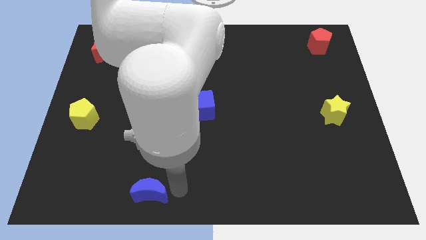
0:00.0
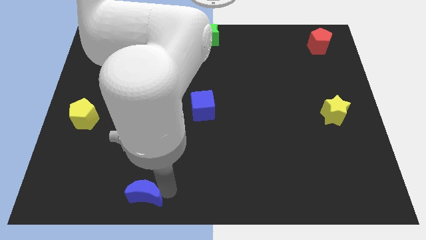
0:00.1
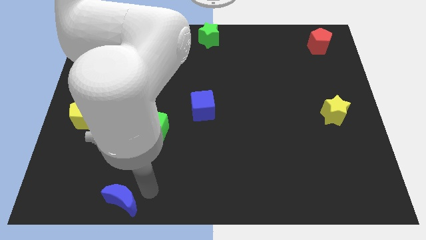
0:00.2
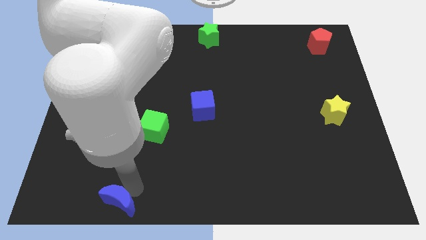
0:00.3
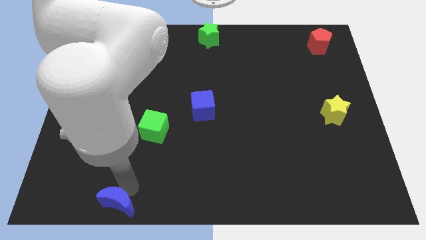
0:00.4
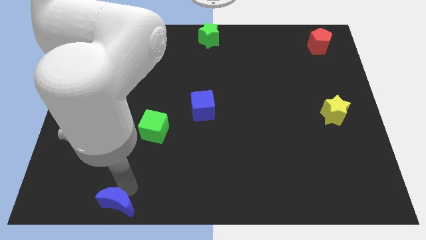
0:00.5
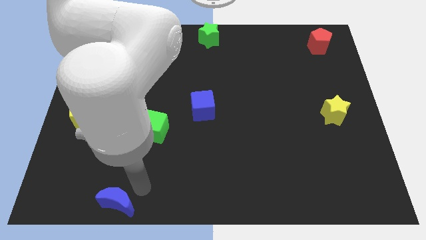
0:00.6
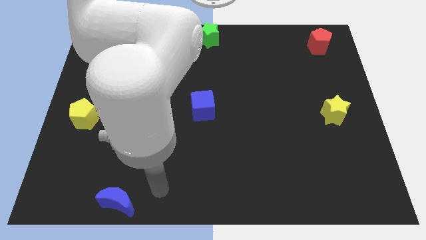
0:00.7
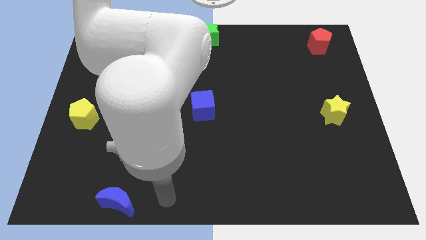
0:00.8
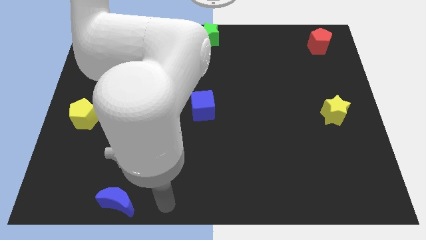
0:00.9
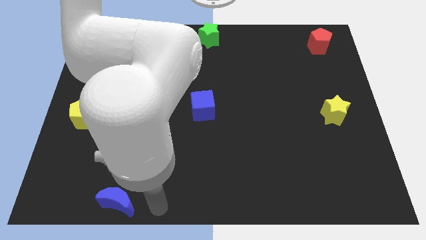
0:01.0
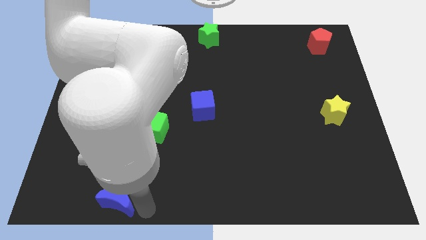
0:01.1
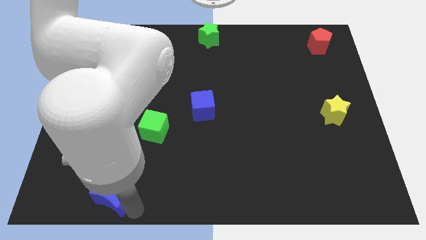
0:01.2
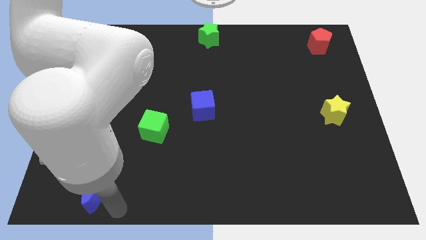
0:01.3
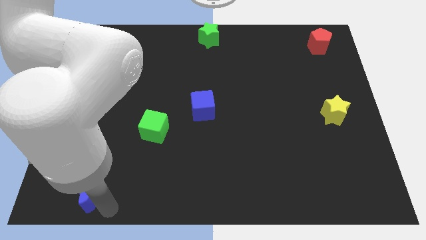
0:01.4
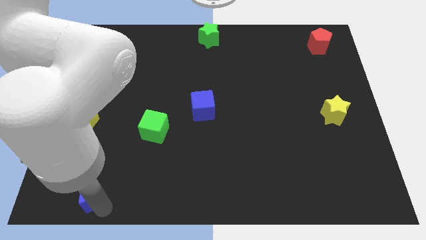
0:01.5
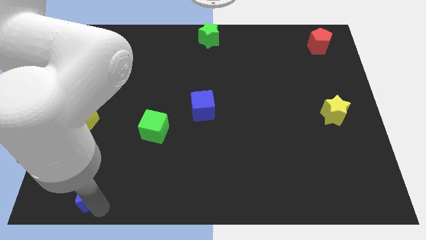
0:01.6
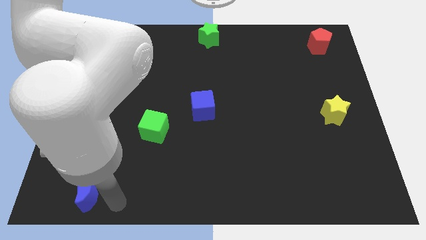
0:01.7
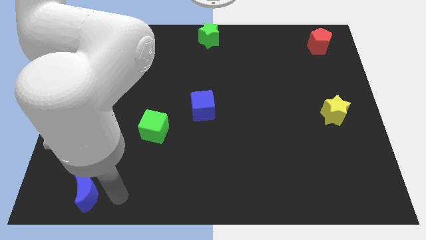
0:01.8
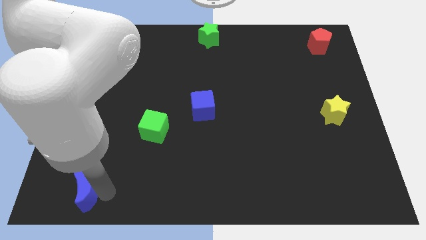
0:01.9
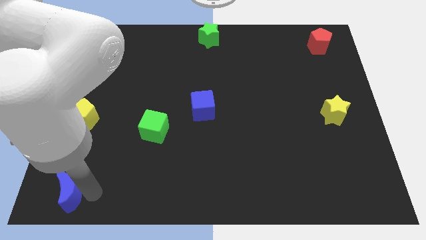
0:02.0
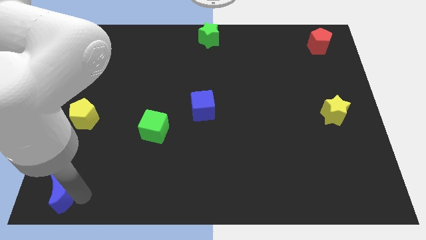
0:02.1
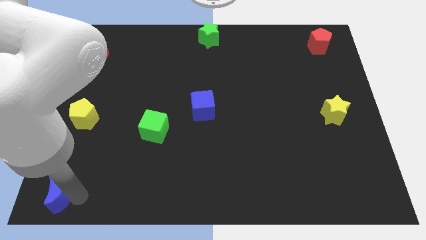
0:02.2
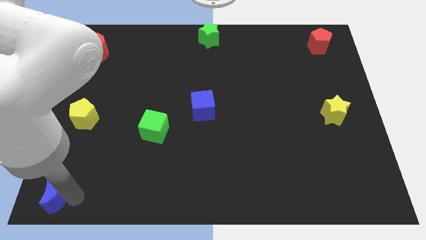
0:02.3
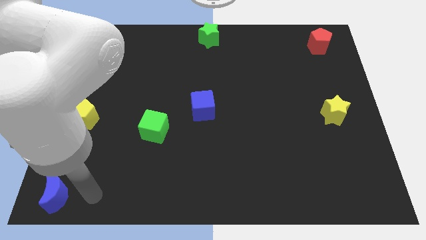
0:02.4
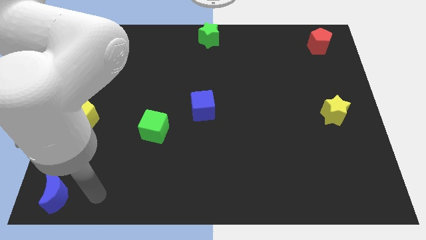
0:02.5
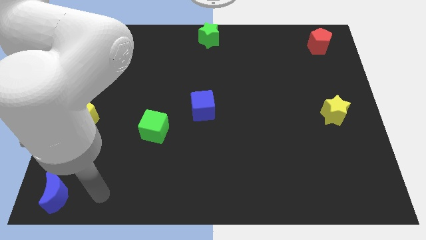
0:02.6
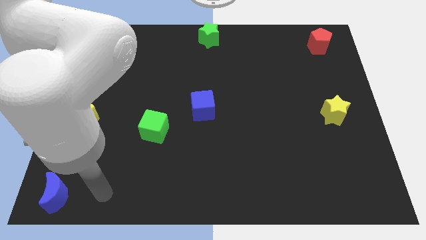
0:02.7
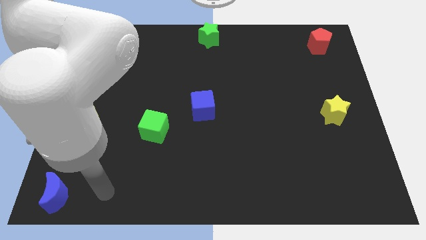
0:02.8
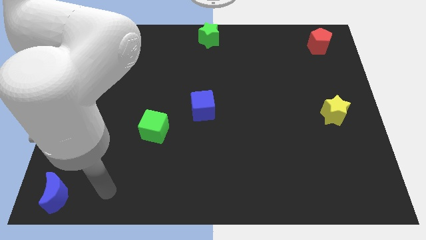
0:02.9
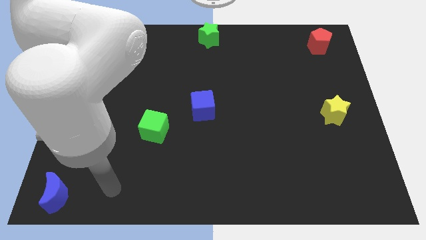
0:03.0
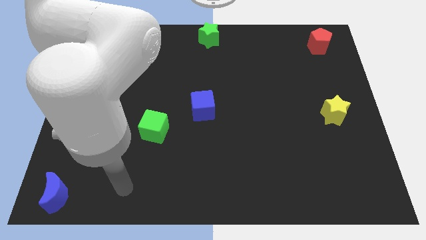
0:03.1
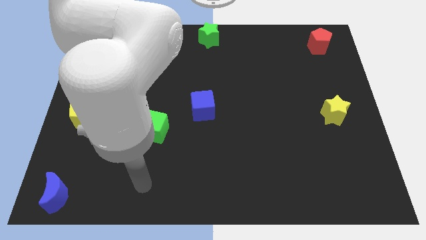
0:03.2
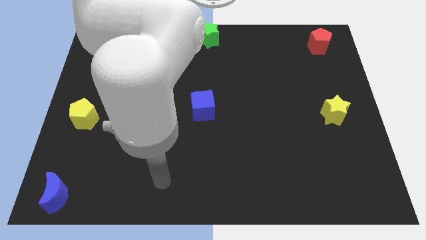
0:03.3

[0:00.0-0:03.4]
move blue moon to the bottom left side of the board

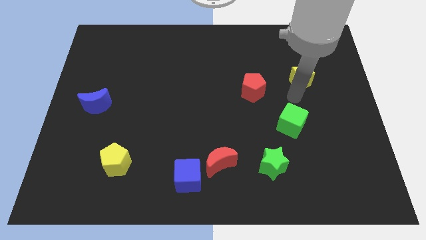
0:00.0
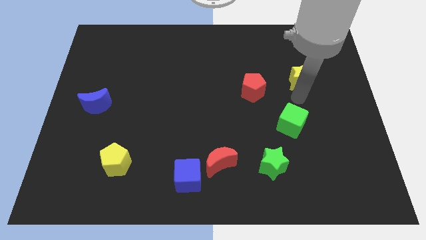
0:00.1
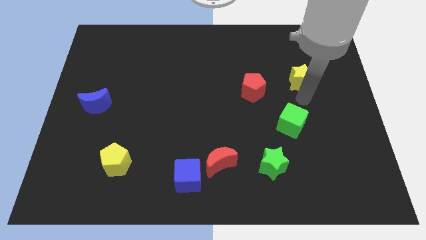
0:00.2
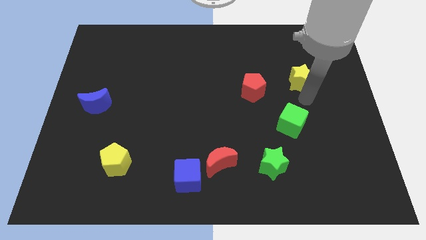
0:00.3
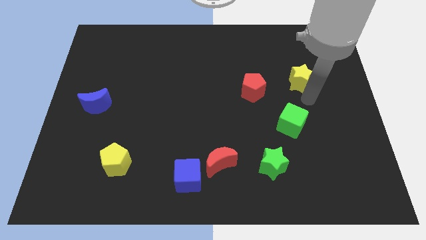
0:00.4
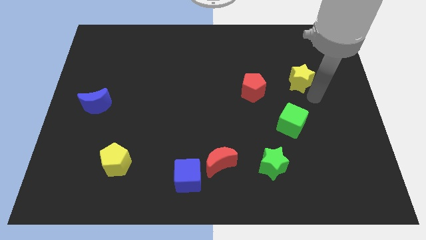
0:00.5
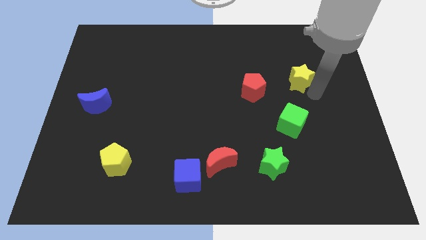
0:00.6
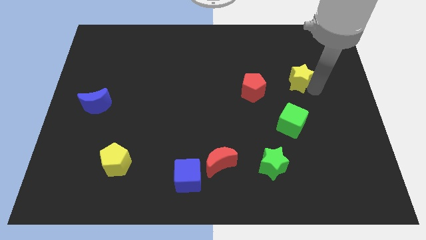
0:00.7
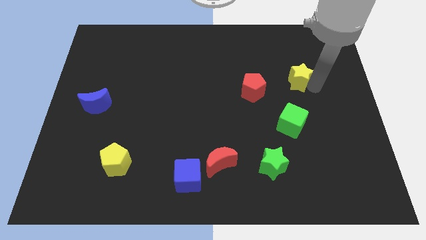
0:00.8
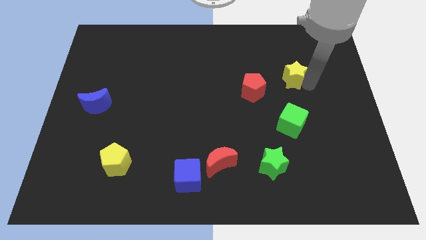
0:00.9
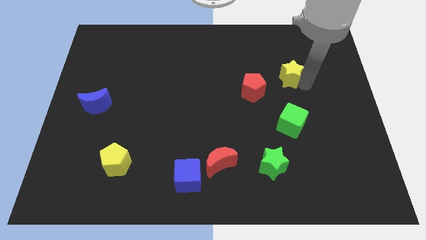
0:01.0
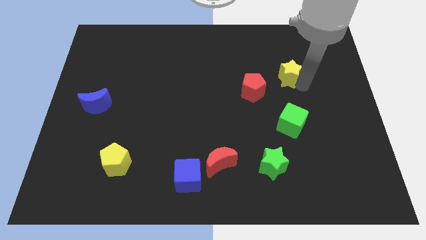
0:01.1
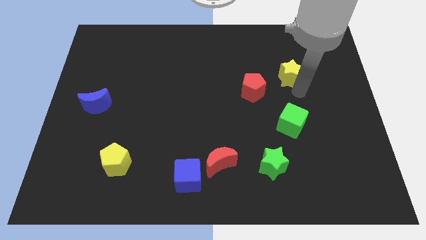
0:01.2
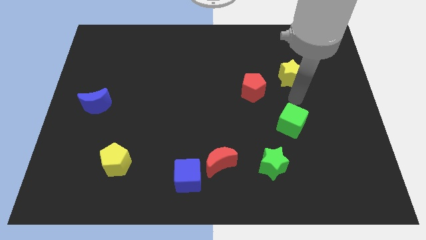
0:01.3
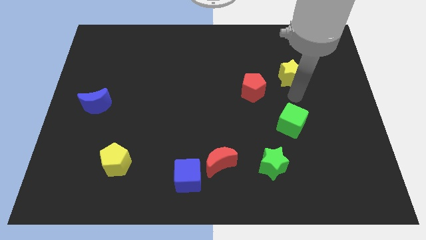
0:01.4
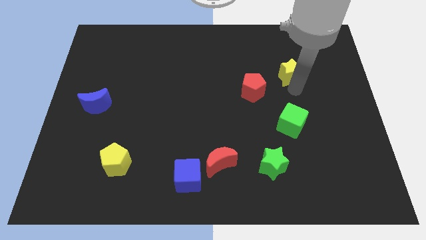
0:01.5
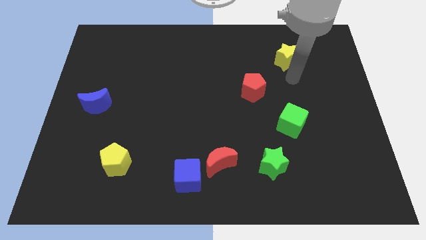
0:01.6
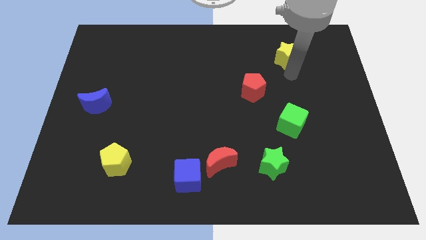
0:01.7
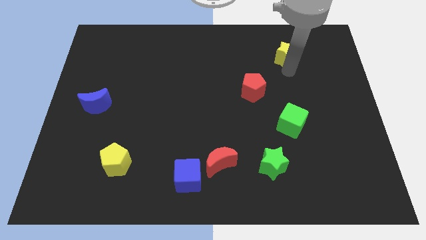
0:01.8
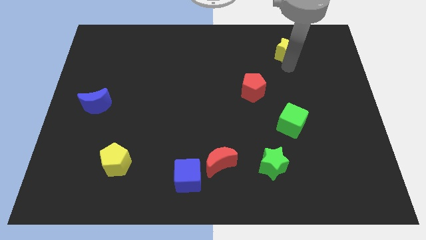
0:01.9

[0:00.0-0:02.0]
push the yellow star slightly to the top side of the board

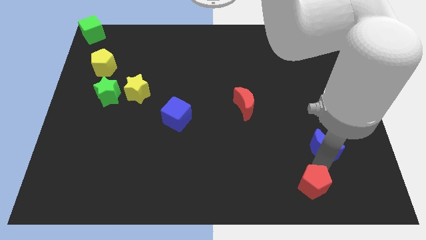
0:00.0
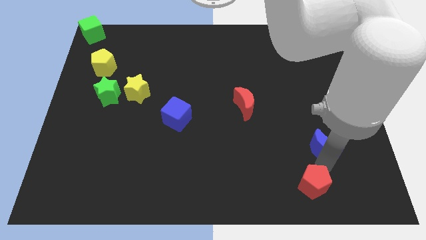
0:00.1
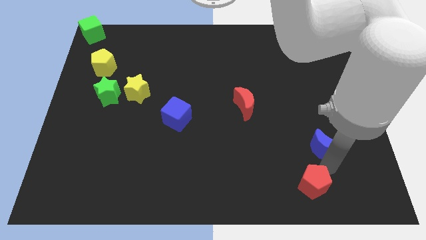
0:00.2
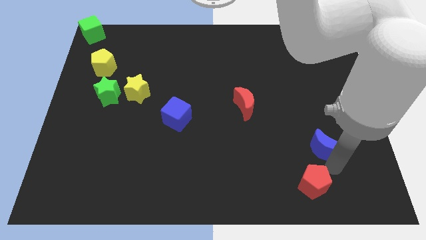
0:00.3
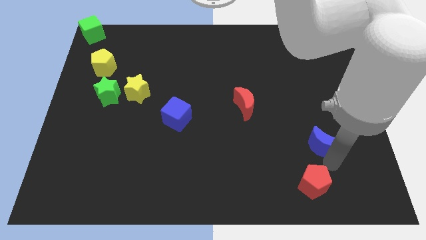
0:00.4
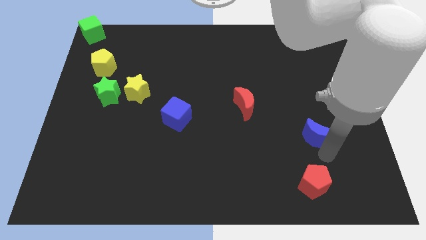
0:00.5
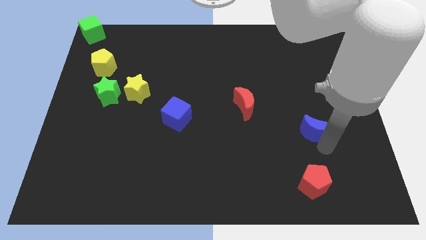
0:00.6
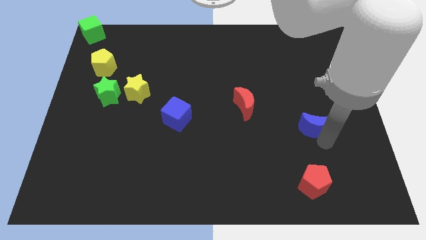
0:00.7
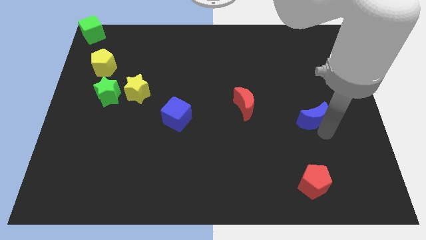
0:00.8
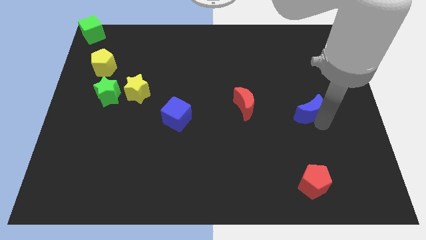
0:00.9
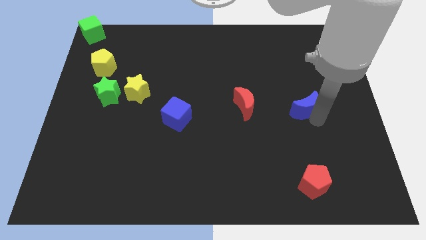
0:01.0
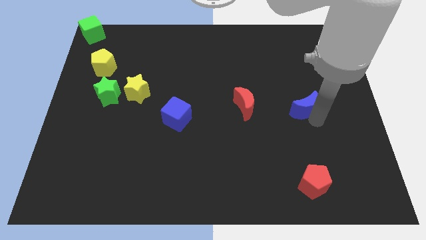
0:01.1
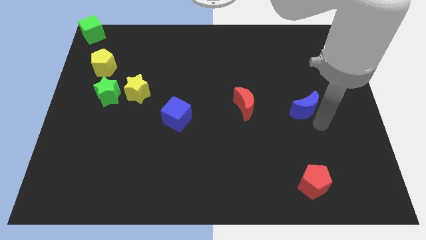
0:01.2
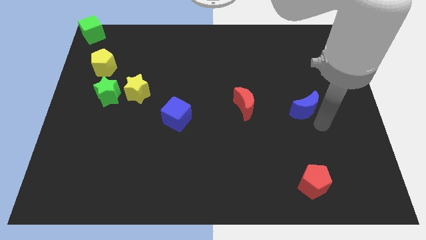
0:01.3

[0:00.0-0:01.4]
push the blue moon to the right of the red moon

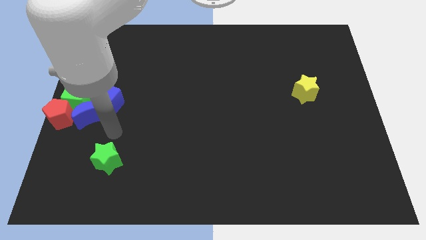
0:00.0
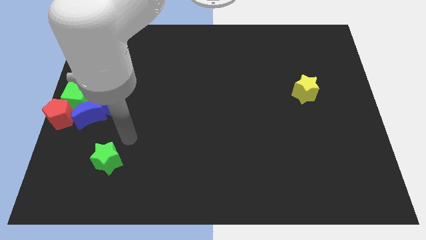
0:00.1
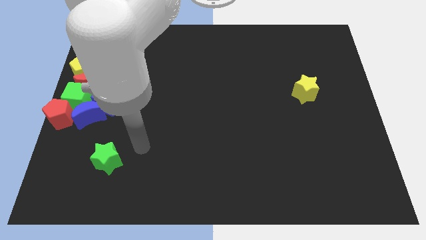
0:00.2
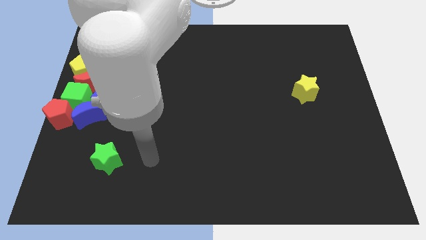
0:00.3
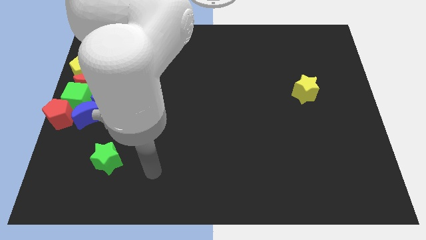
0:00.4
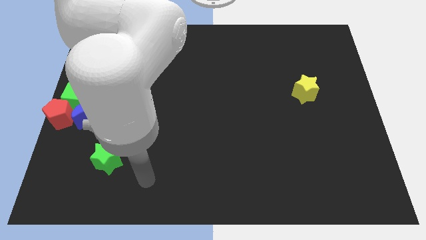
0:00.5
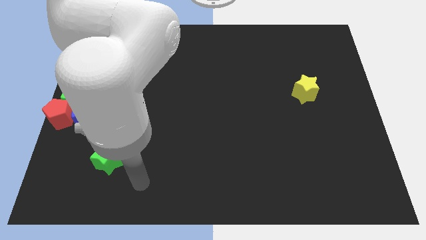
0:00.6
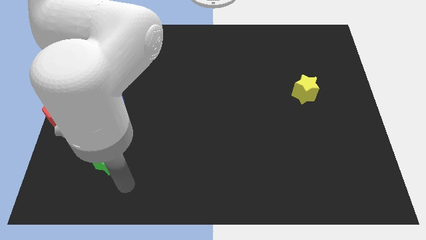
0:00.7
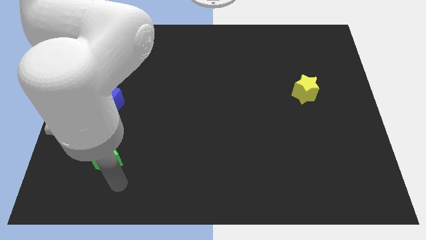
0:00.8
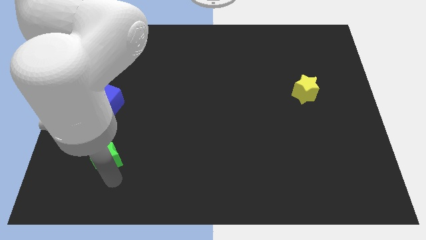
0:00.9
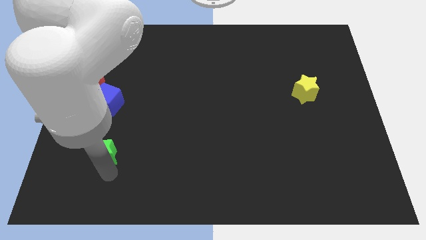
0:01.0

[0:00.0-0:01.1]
tap the green star

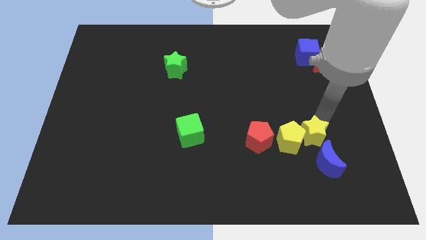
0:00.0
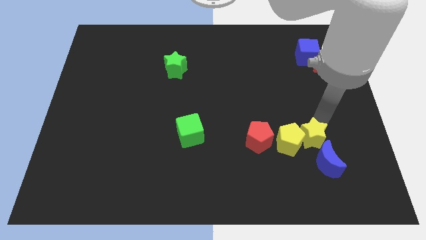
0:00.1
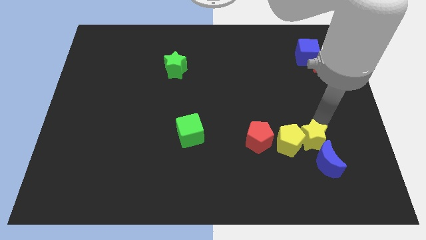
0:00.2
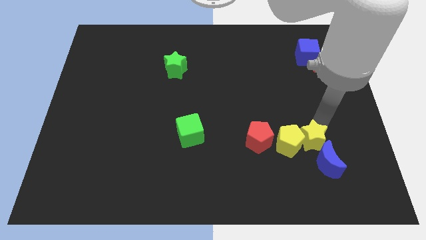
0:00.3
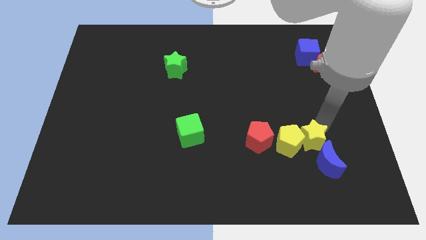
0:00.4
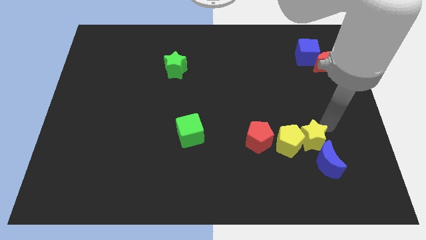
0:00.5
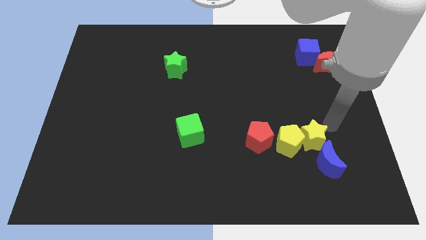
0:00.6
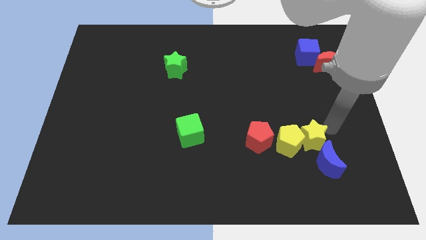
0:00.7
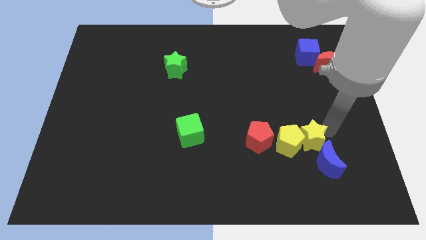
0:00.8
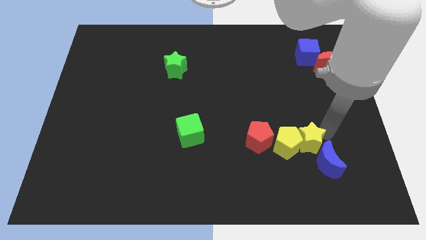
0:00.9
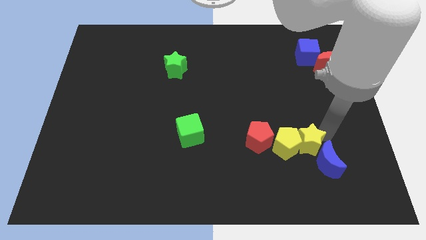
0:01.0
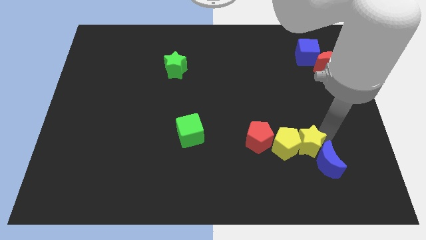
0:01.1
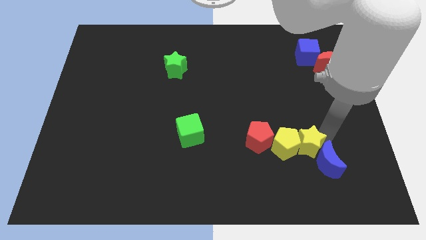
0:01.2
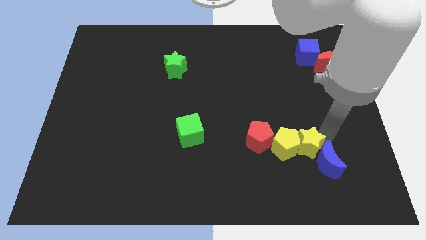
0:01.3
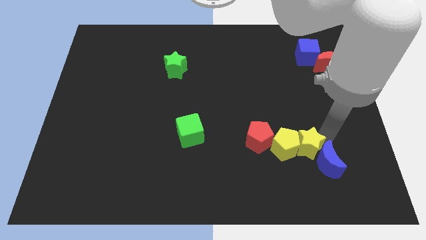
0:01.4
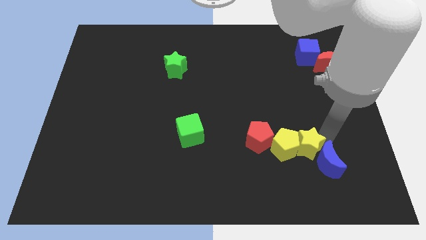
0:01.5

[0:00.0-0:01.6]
move the yellow star to the right of the yellow pentagon
